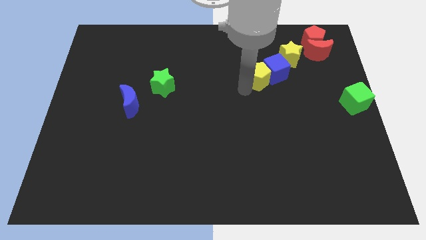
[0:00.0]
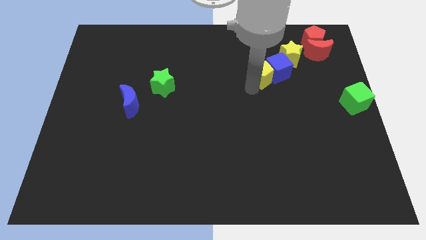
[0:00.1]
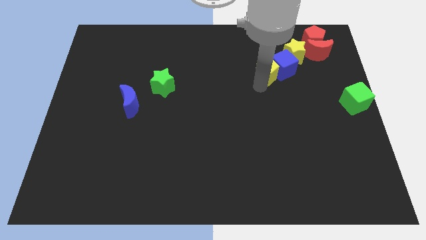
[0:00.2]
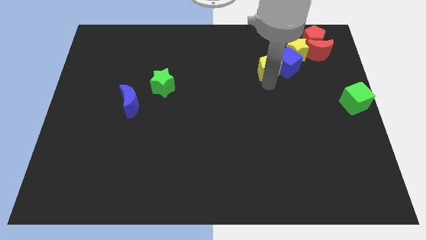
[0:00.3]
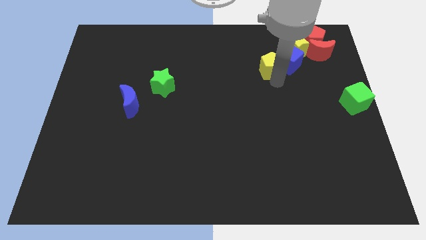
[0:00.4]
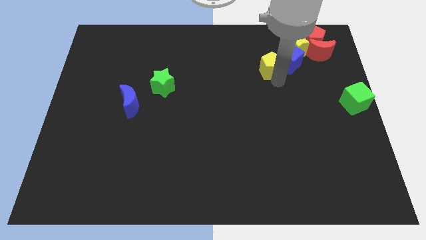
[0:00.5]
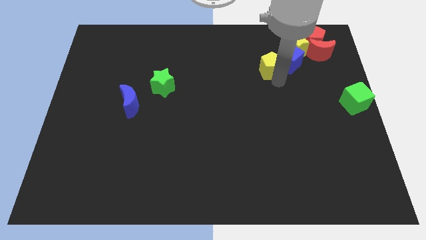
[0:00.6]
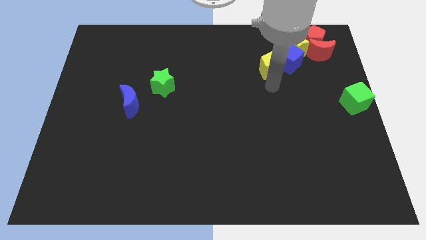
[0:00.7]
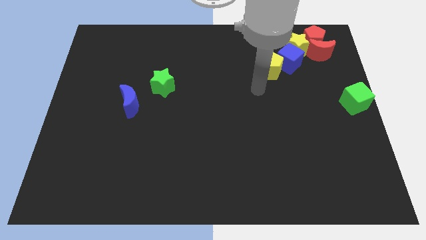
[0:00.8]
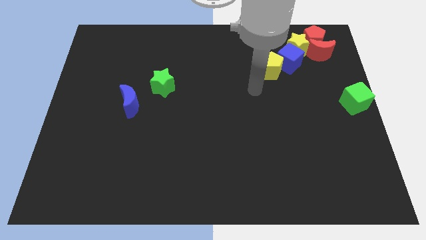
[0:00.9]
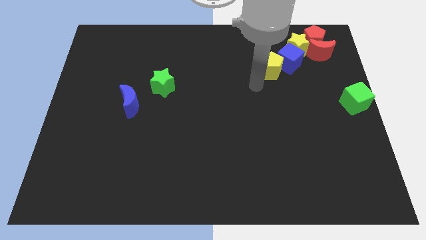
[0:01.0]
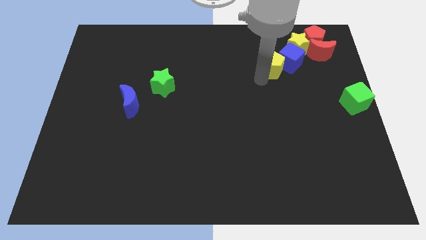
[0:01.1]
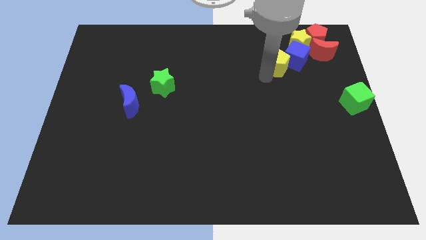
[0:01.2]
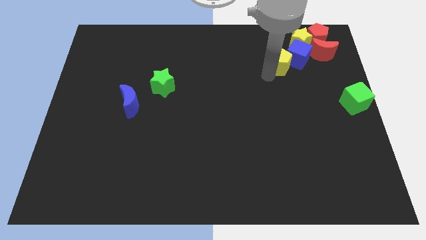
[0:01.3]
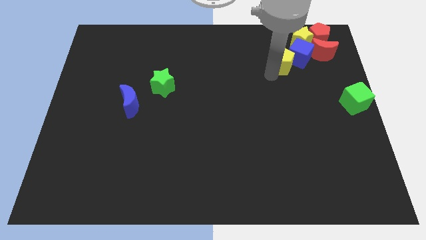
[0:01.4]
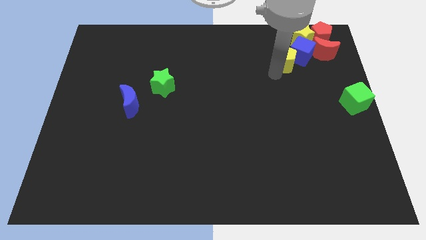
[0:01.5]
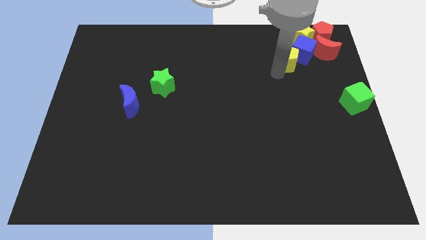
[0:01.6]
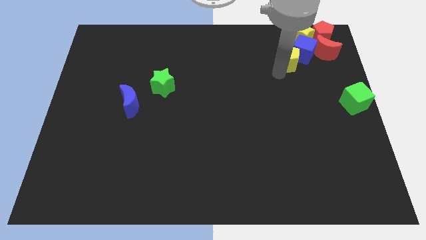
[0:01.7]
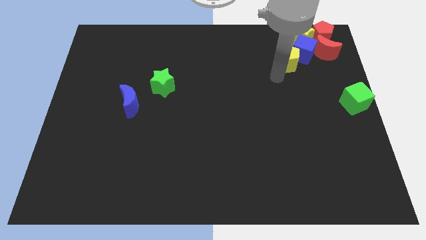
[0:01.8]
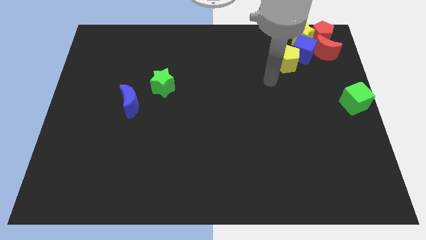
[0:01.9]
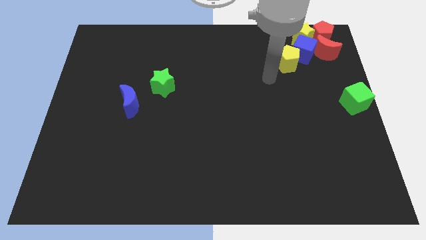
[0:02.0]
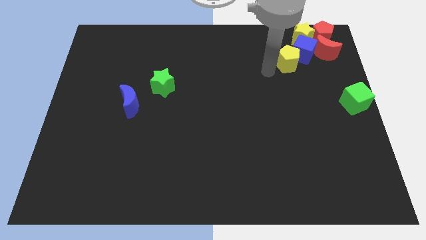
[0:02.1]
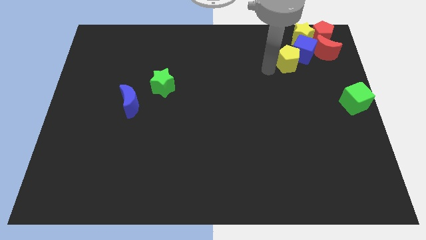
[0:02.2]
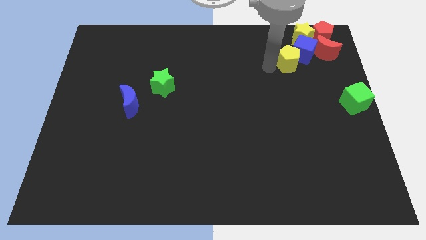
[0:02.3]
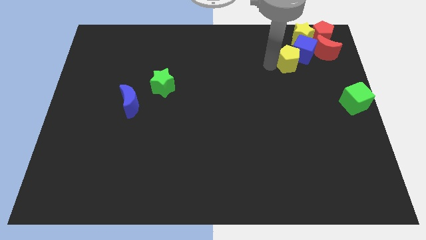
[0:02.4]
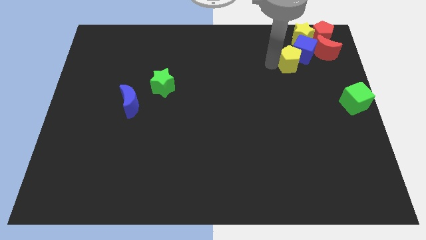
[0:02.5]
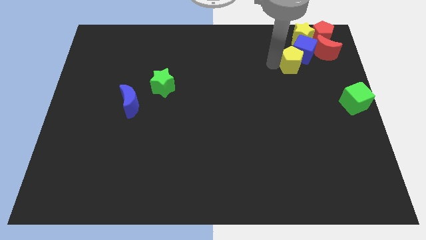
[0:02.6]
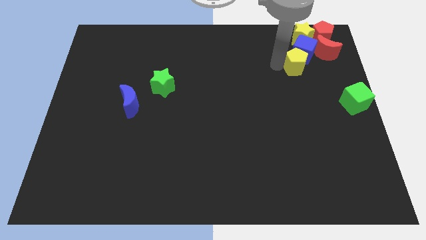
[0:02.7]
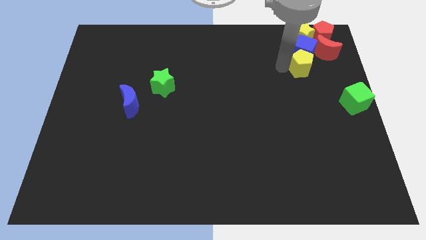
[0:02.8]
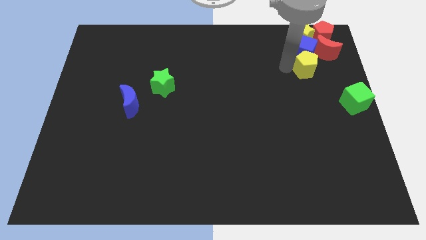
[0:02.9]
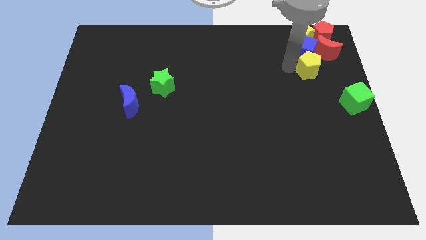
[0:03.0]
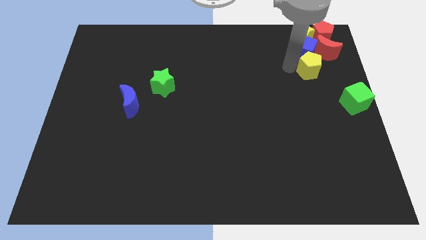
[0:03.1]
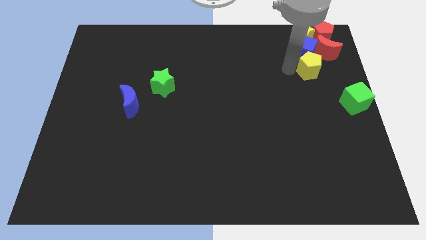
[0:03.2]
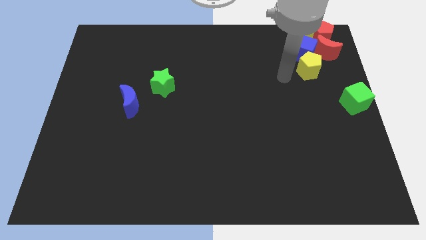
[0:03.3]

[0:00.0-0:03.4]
place the blue cube and yellow pentagon at the bottom of the yellow star

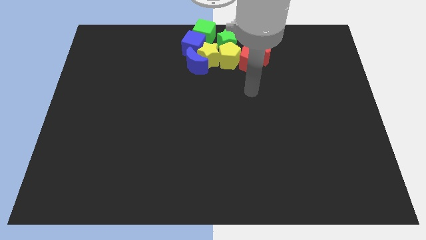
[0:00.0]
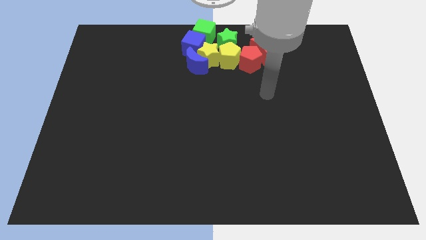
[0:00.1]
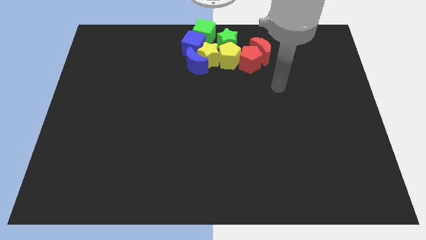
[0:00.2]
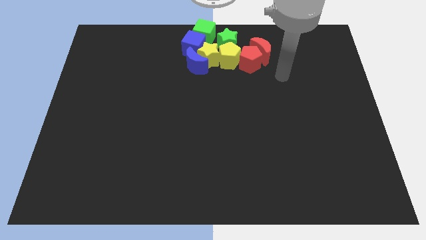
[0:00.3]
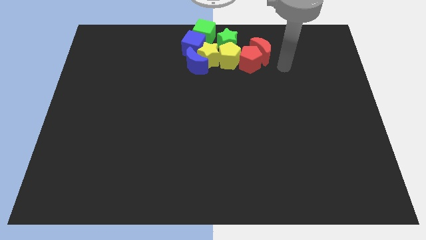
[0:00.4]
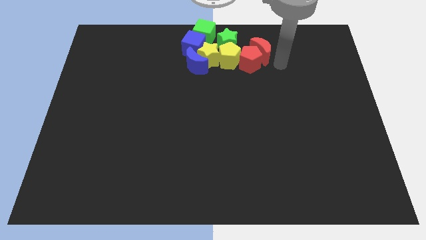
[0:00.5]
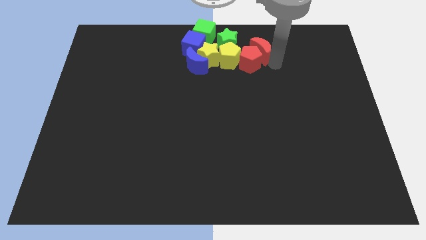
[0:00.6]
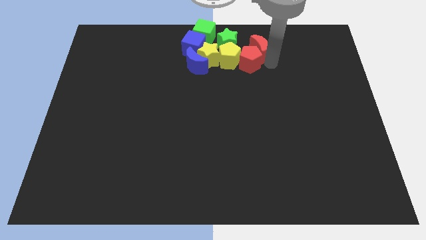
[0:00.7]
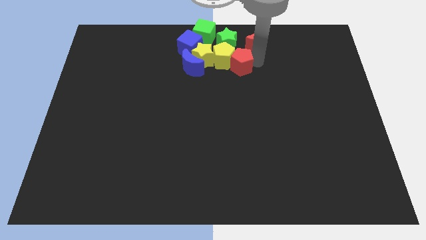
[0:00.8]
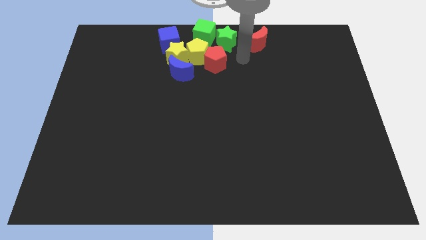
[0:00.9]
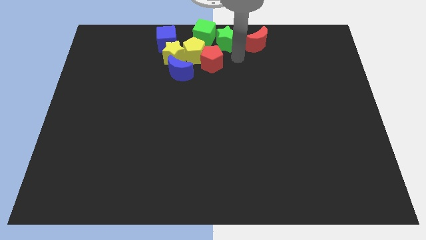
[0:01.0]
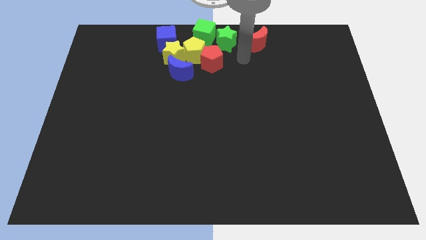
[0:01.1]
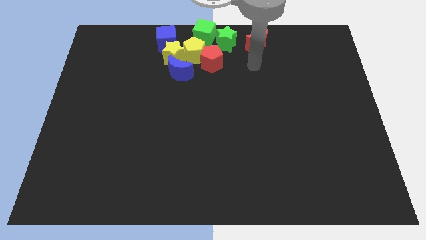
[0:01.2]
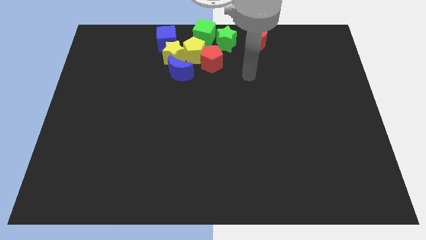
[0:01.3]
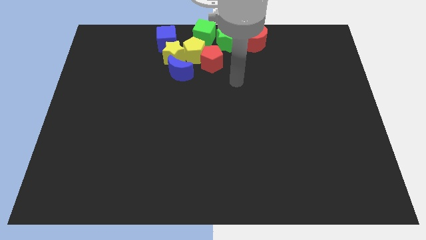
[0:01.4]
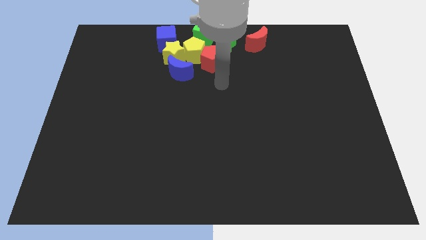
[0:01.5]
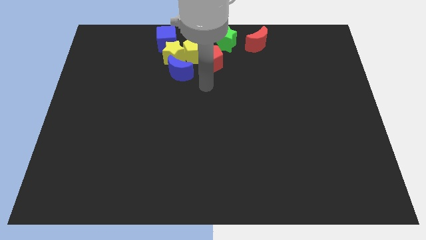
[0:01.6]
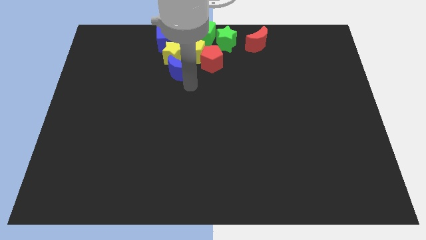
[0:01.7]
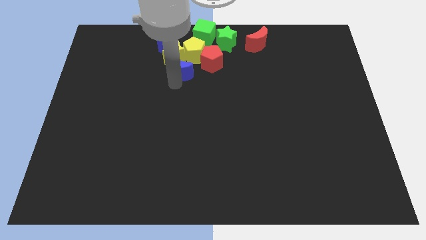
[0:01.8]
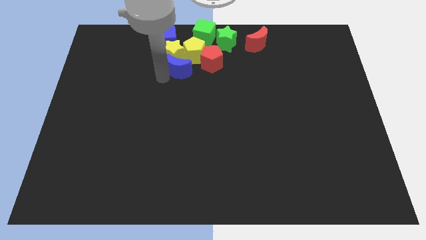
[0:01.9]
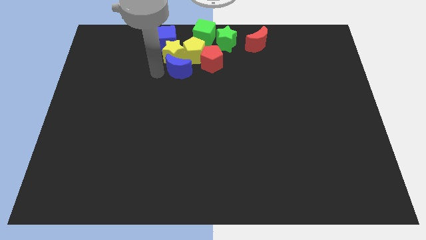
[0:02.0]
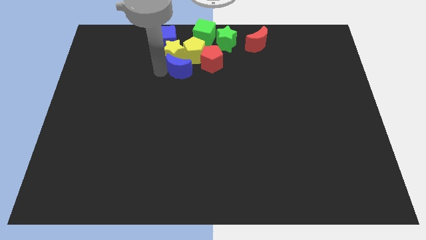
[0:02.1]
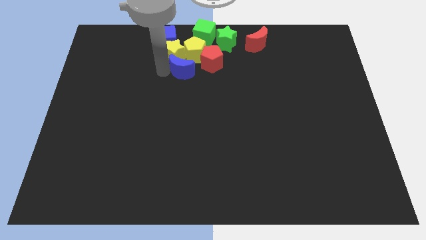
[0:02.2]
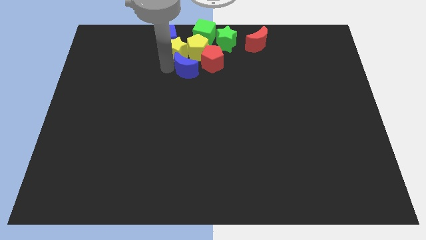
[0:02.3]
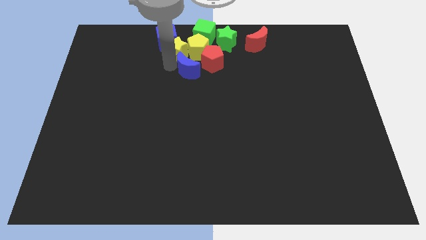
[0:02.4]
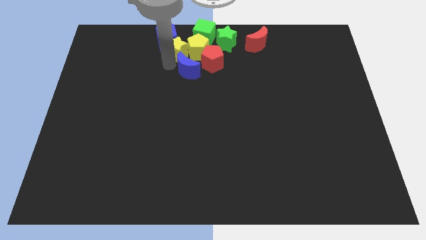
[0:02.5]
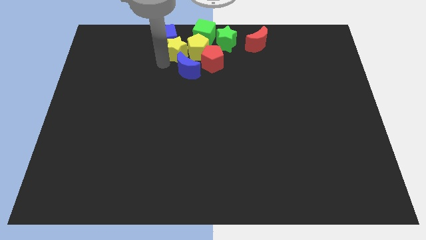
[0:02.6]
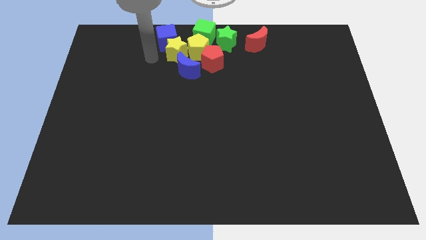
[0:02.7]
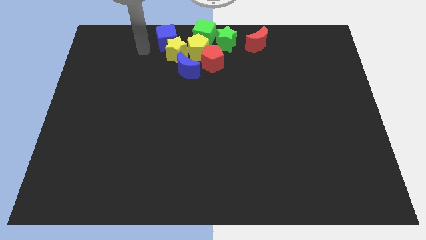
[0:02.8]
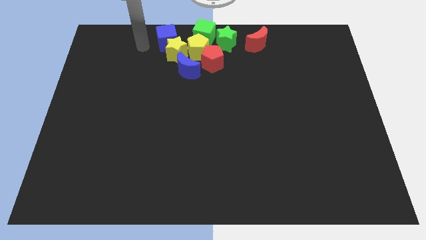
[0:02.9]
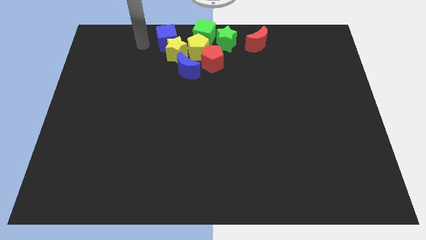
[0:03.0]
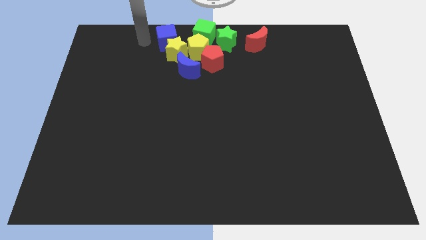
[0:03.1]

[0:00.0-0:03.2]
move your arm towards the left side of the blue cube

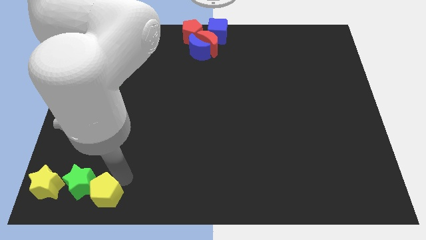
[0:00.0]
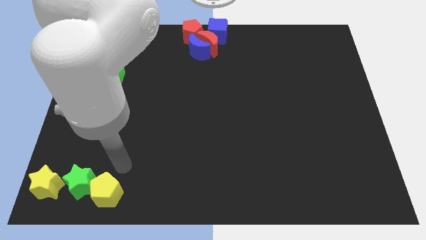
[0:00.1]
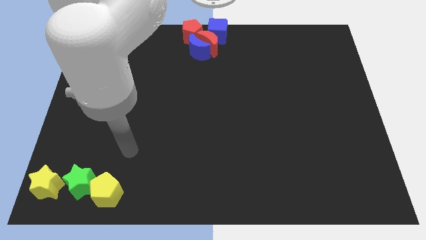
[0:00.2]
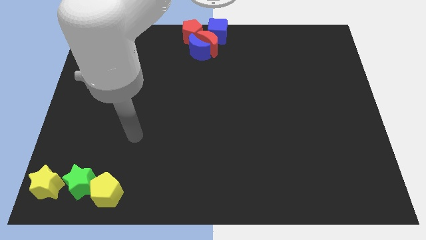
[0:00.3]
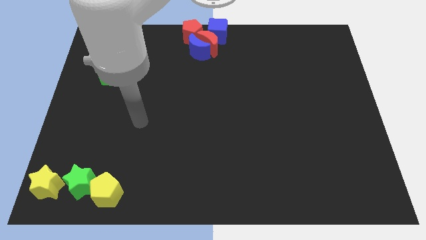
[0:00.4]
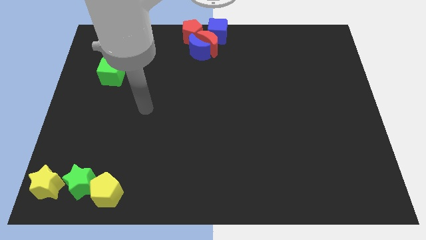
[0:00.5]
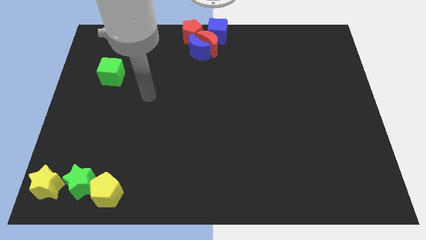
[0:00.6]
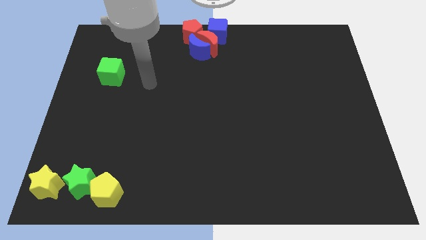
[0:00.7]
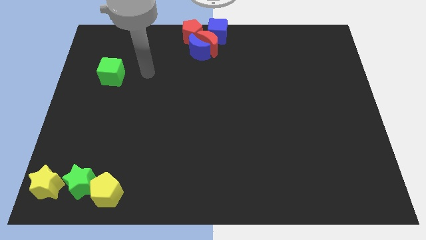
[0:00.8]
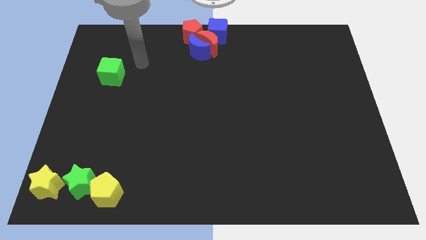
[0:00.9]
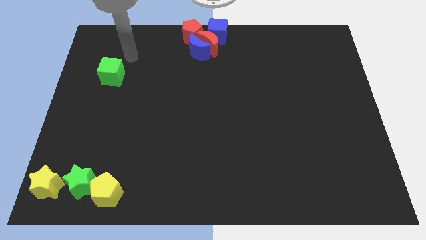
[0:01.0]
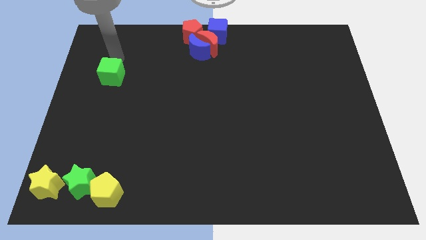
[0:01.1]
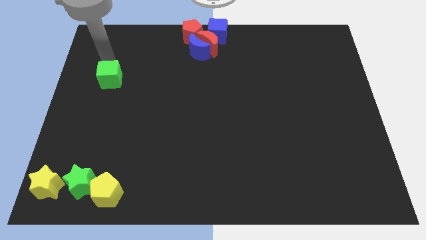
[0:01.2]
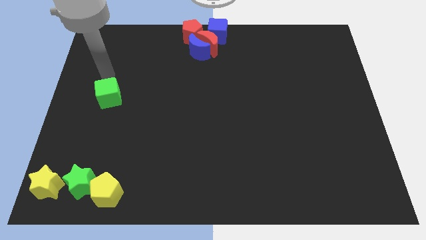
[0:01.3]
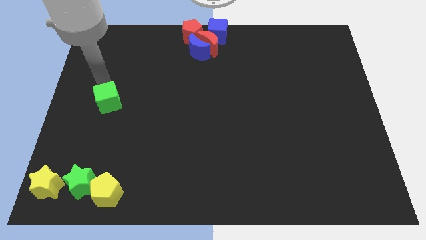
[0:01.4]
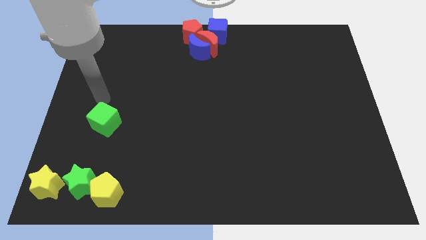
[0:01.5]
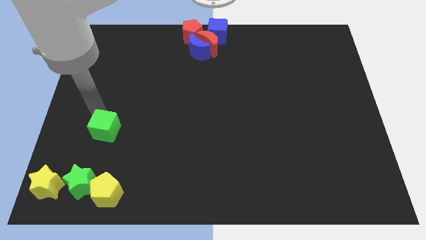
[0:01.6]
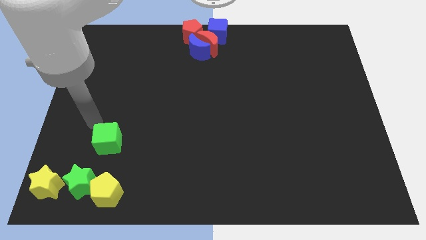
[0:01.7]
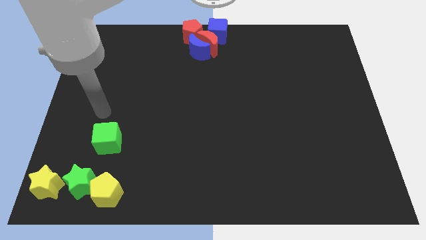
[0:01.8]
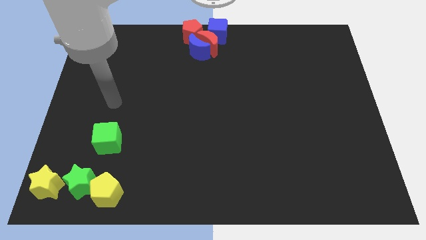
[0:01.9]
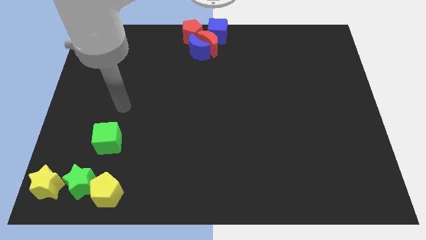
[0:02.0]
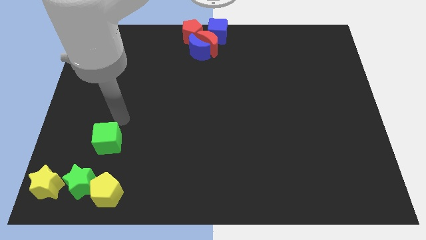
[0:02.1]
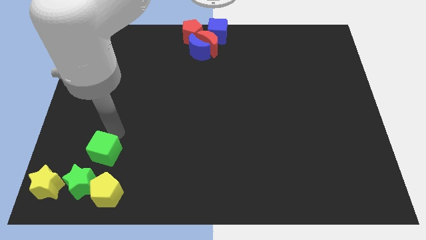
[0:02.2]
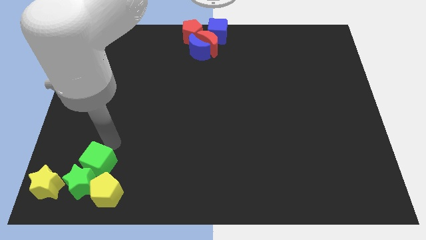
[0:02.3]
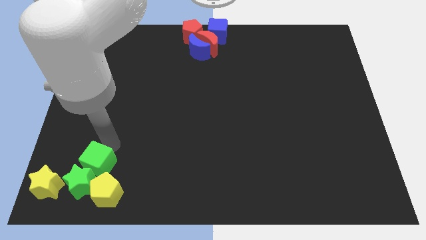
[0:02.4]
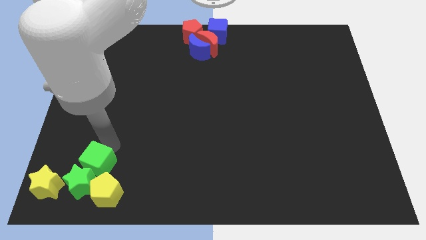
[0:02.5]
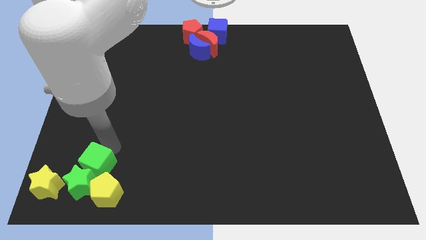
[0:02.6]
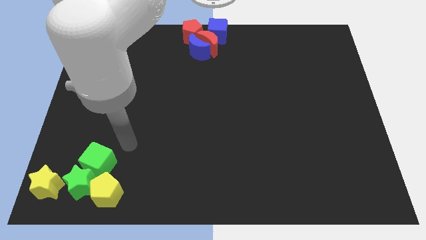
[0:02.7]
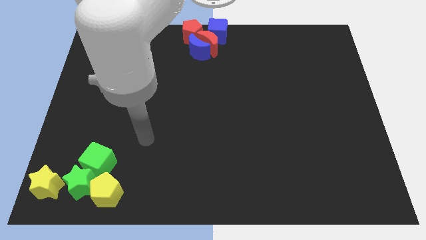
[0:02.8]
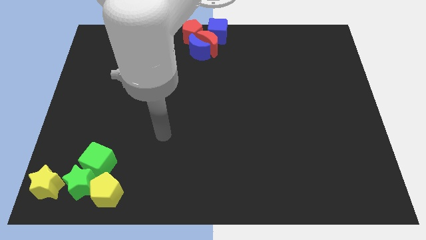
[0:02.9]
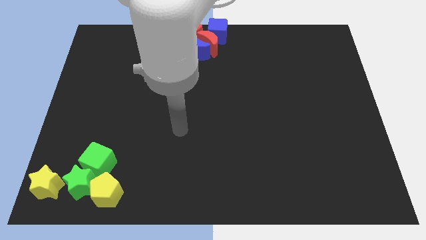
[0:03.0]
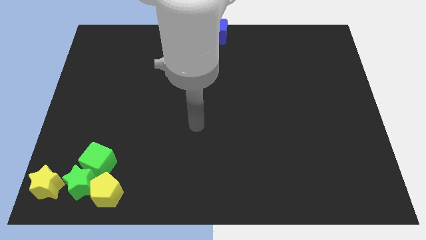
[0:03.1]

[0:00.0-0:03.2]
push the green cube towards the bottom side of the board
